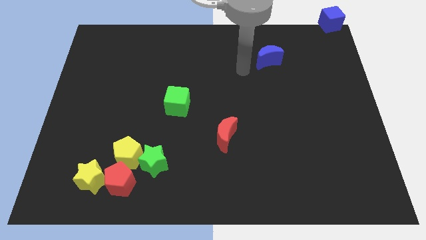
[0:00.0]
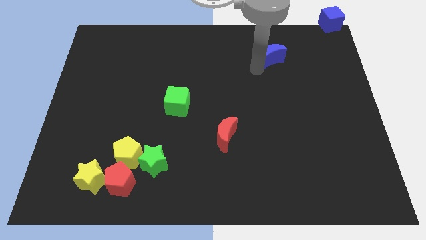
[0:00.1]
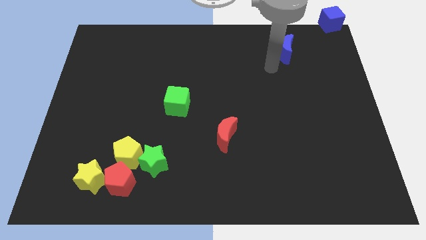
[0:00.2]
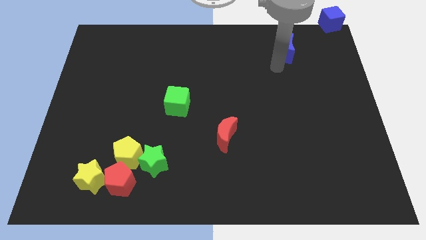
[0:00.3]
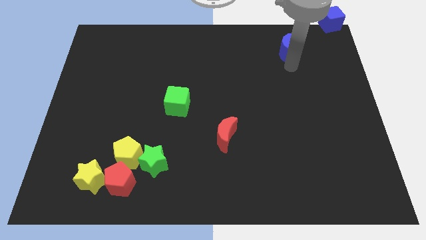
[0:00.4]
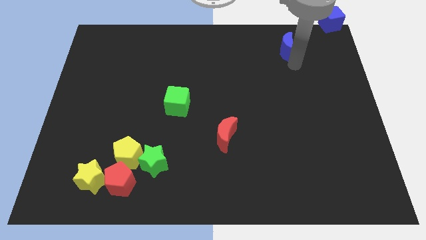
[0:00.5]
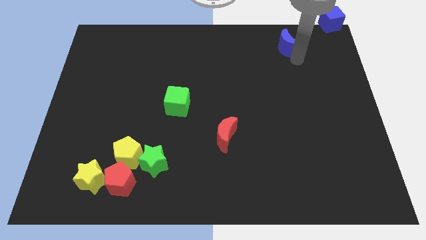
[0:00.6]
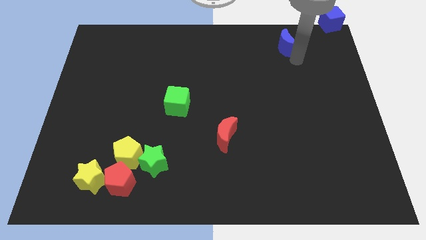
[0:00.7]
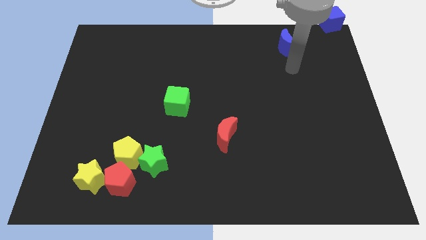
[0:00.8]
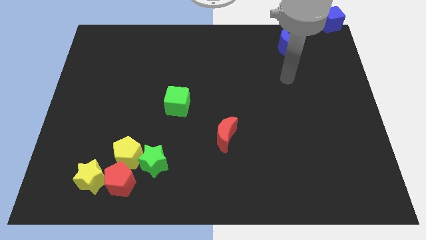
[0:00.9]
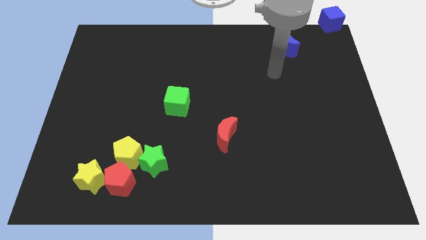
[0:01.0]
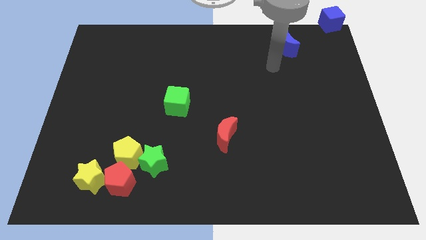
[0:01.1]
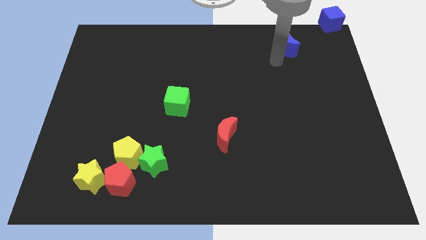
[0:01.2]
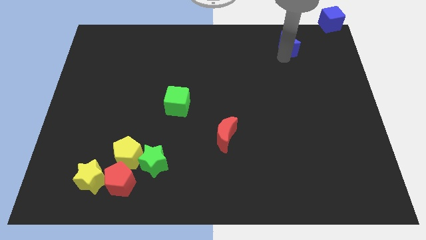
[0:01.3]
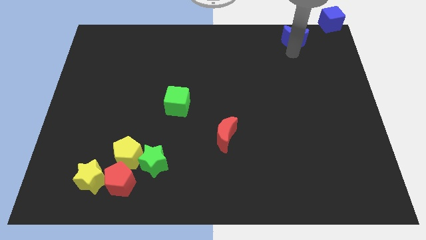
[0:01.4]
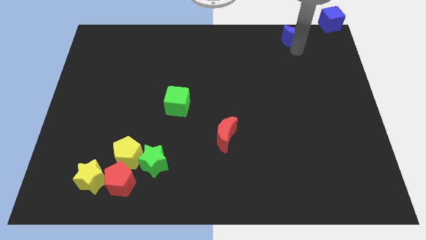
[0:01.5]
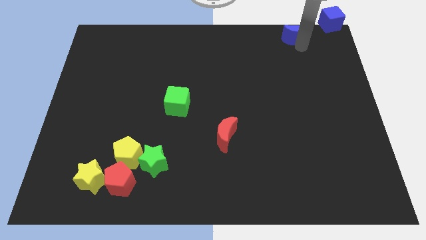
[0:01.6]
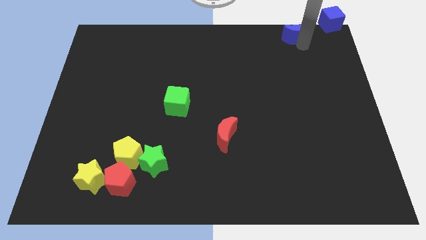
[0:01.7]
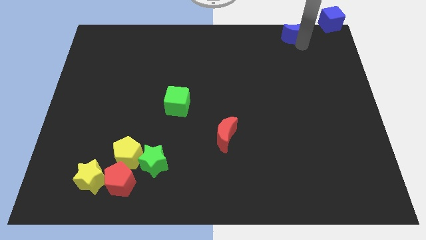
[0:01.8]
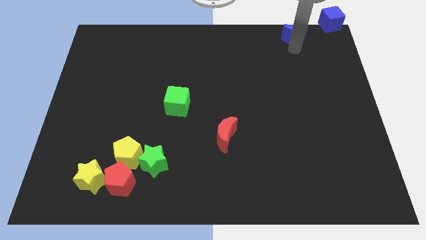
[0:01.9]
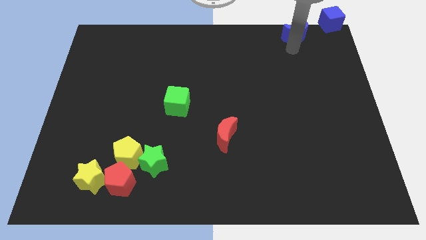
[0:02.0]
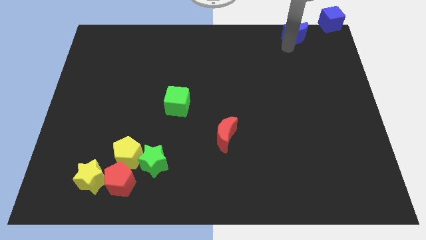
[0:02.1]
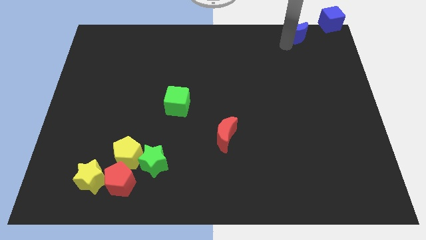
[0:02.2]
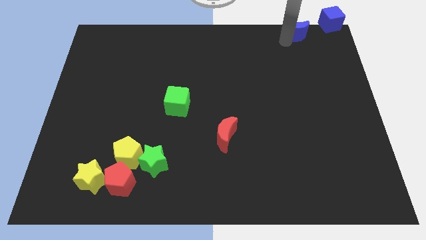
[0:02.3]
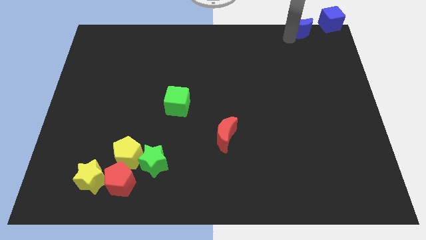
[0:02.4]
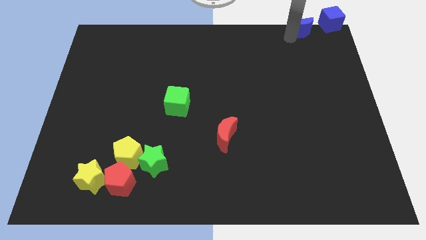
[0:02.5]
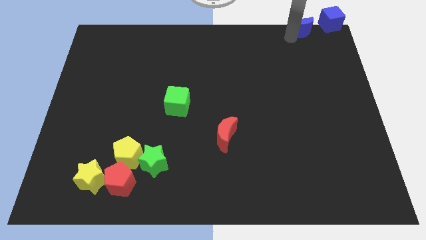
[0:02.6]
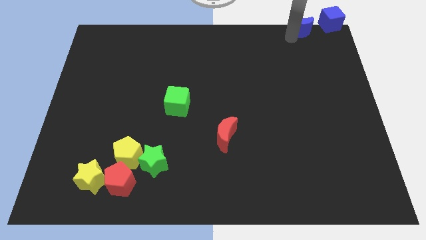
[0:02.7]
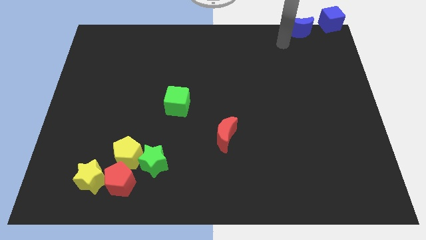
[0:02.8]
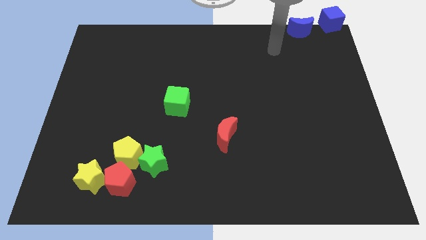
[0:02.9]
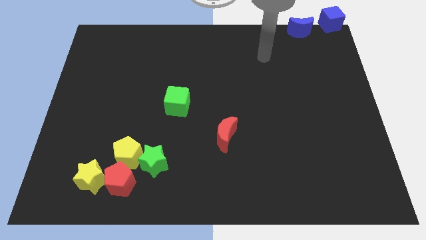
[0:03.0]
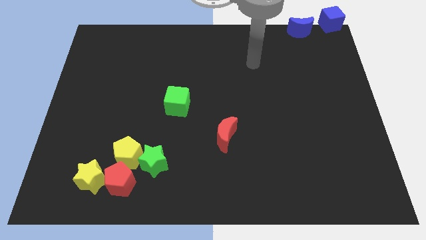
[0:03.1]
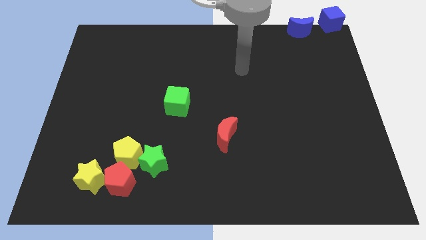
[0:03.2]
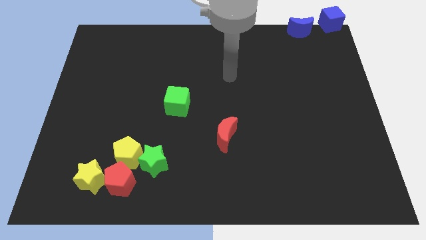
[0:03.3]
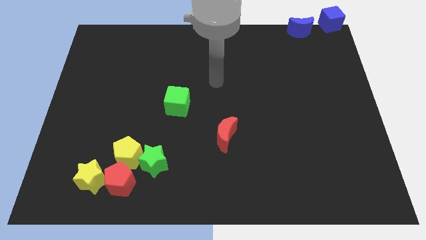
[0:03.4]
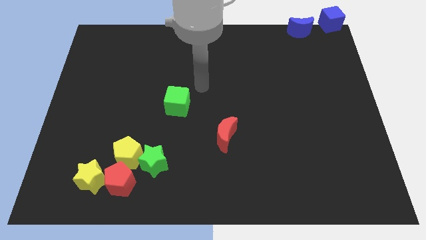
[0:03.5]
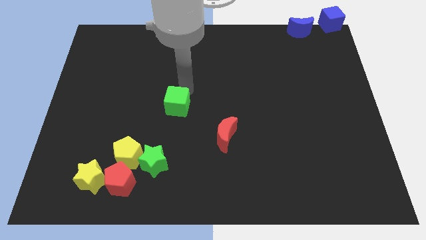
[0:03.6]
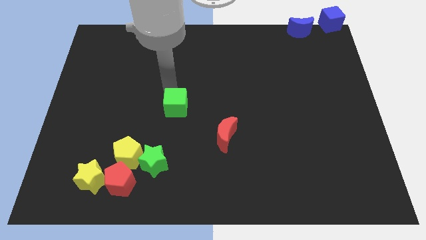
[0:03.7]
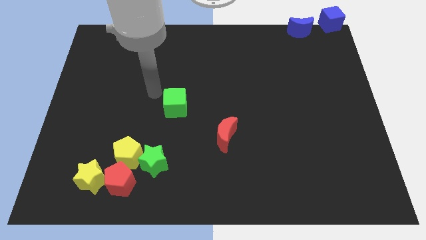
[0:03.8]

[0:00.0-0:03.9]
place the blue moon to the left of the blue cube

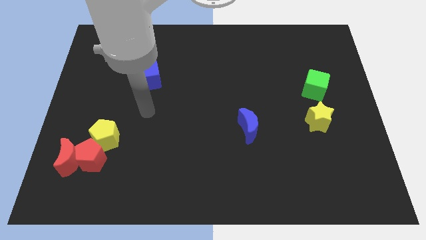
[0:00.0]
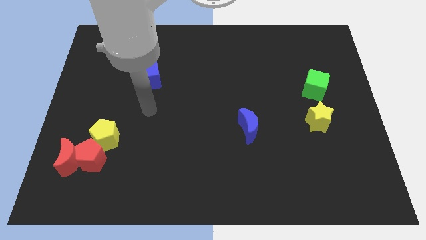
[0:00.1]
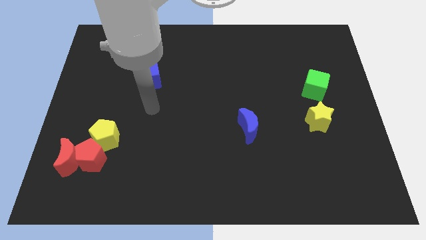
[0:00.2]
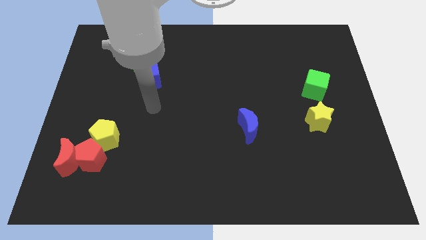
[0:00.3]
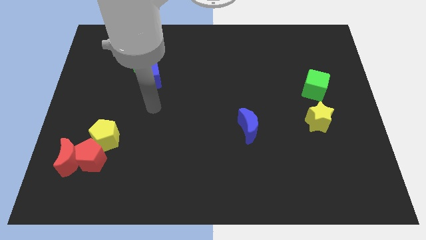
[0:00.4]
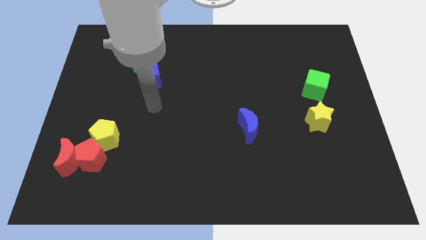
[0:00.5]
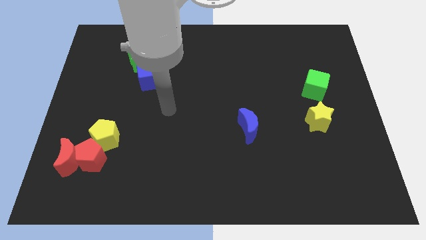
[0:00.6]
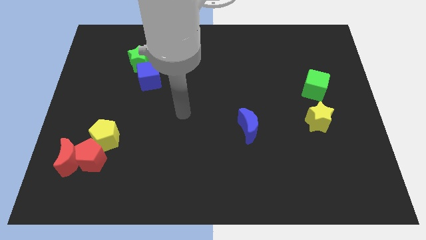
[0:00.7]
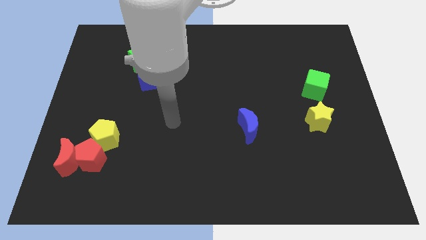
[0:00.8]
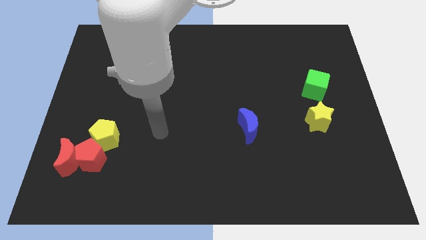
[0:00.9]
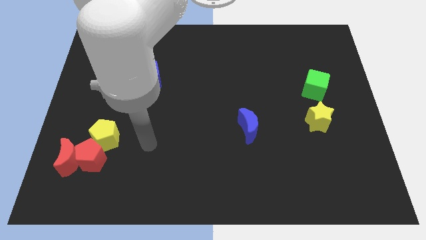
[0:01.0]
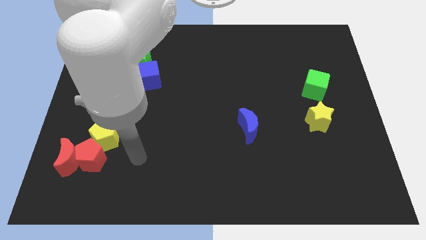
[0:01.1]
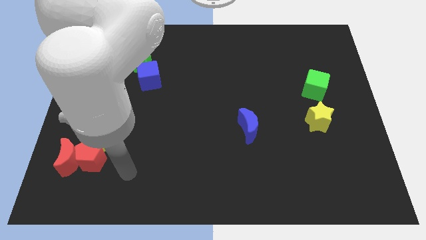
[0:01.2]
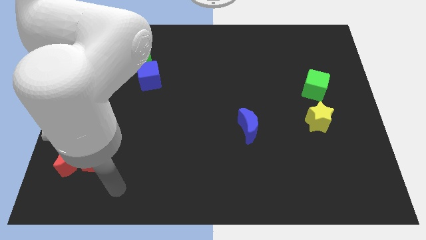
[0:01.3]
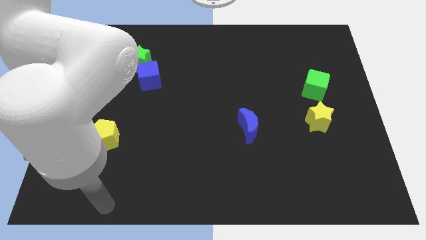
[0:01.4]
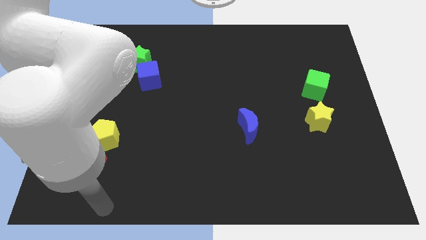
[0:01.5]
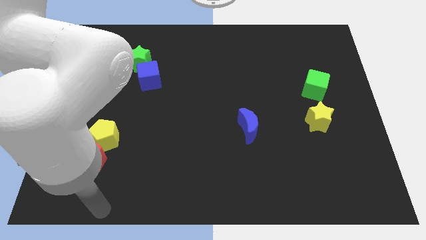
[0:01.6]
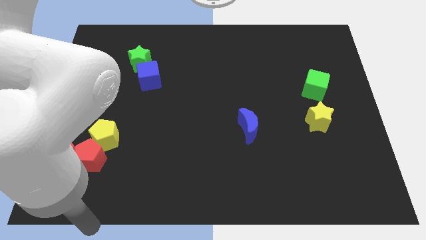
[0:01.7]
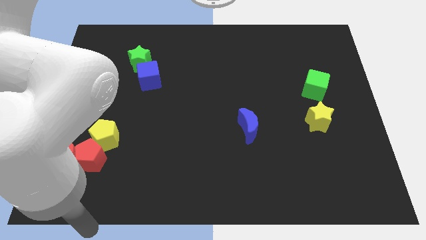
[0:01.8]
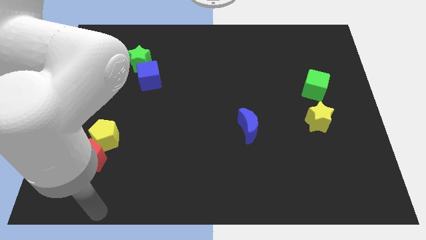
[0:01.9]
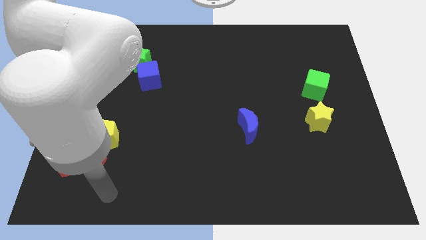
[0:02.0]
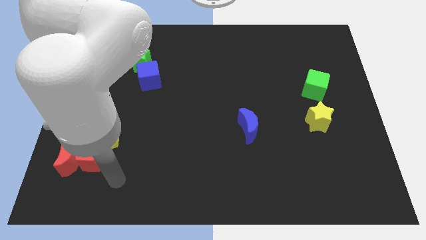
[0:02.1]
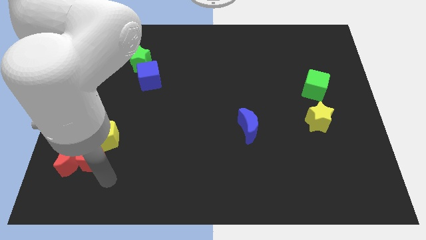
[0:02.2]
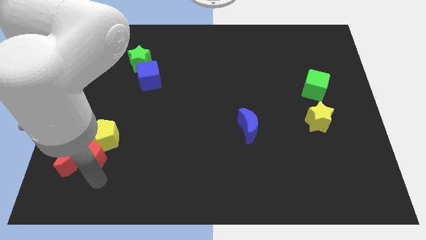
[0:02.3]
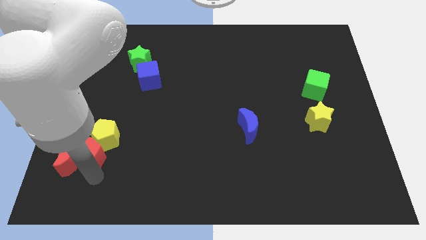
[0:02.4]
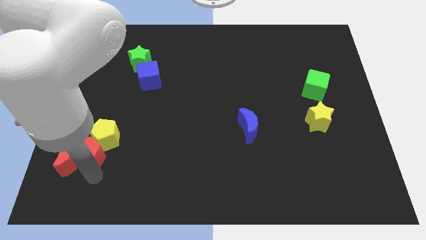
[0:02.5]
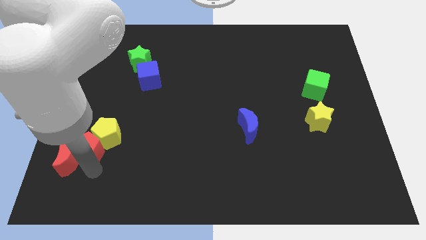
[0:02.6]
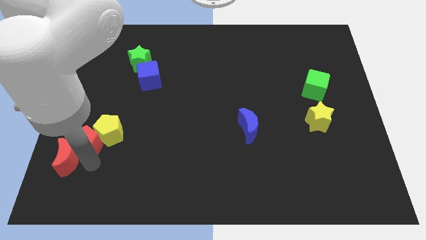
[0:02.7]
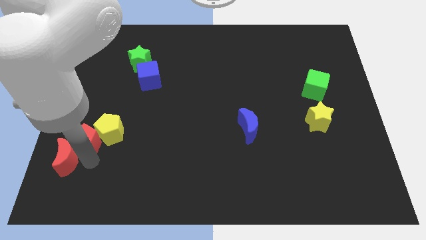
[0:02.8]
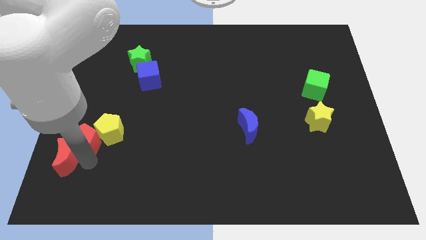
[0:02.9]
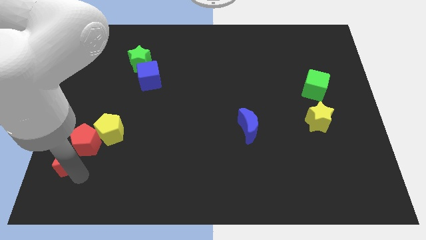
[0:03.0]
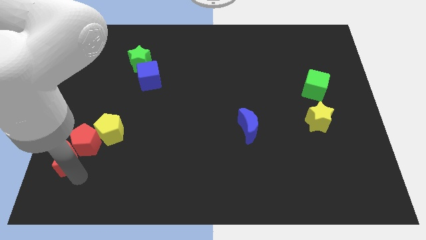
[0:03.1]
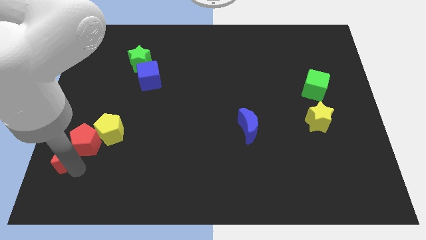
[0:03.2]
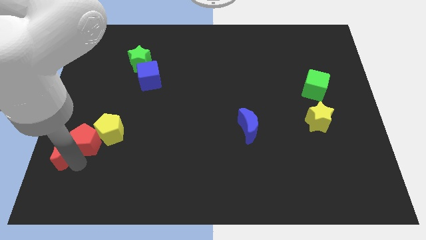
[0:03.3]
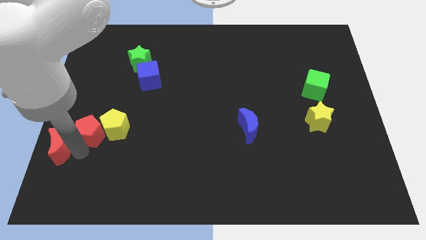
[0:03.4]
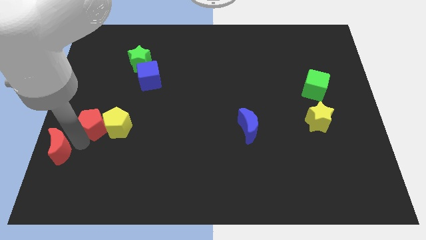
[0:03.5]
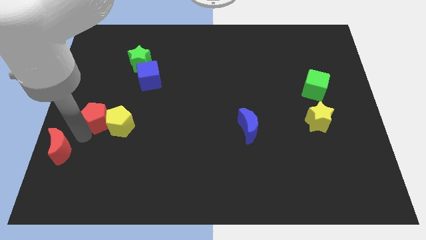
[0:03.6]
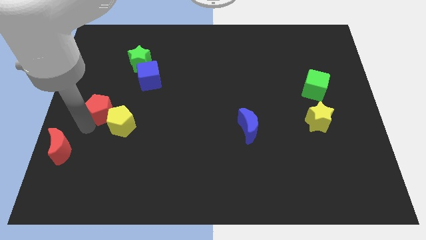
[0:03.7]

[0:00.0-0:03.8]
separate the red pentagon and yellow pentagon from the red moon

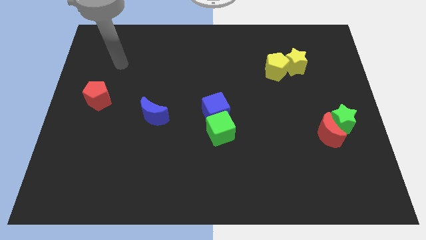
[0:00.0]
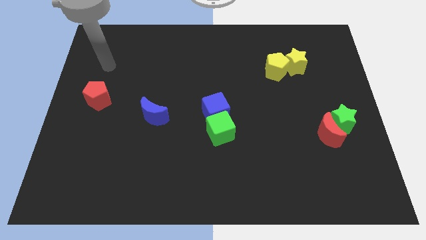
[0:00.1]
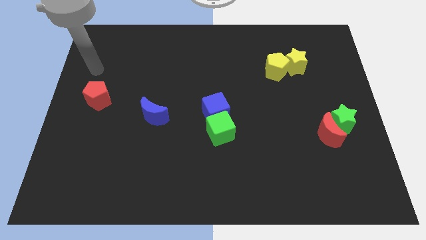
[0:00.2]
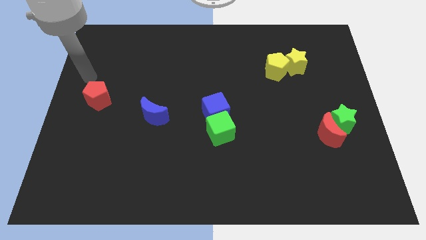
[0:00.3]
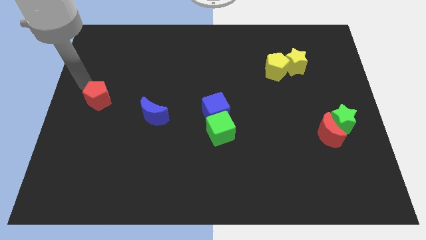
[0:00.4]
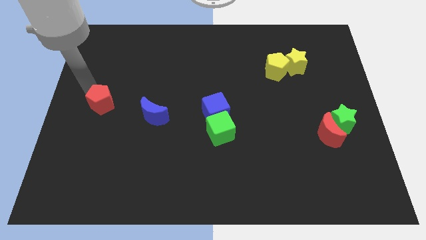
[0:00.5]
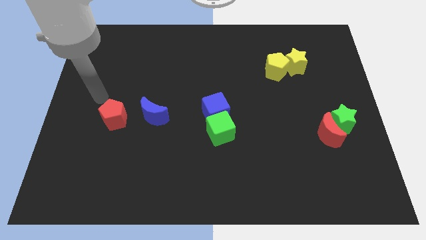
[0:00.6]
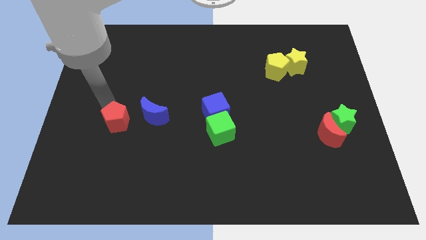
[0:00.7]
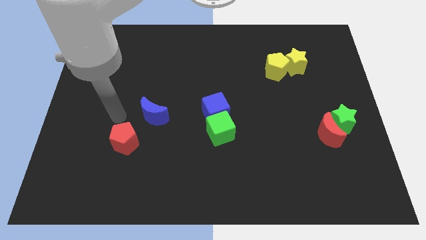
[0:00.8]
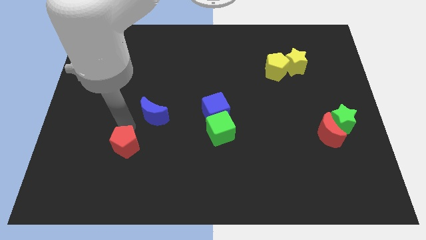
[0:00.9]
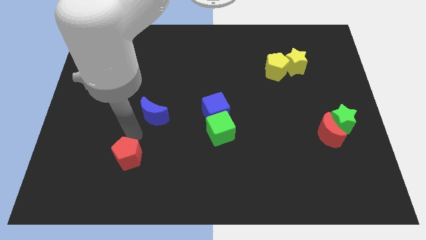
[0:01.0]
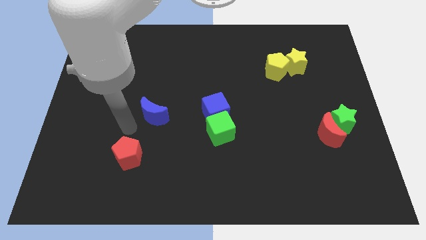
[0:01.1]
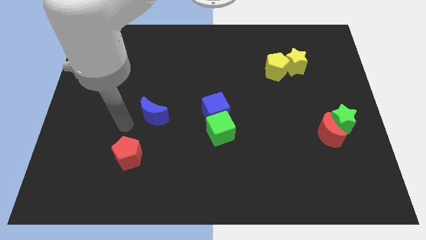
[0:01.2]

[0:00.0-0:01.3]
push the red pentagon towards the bottom side of the board
